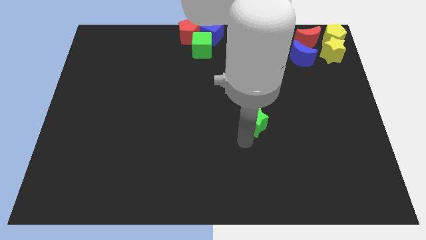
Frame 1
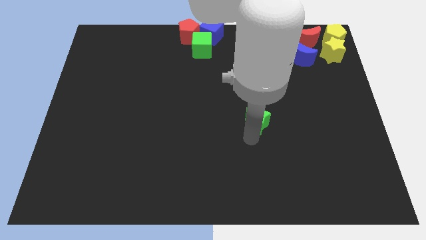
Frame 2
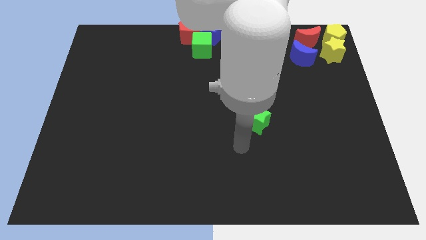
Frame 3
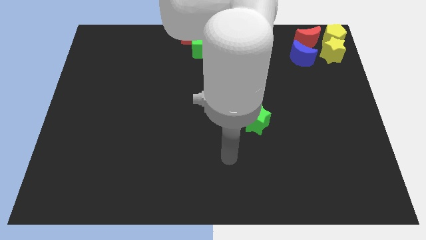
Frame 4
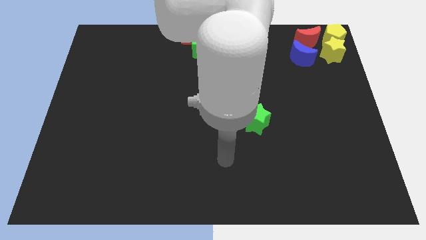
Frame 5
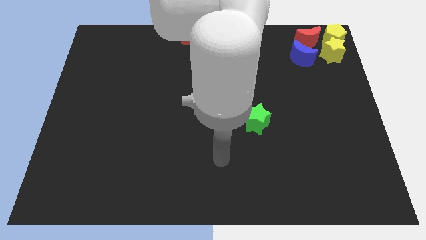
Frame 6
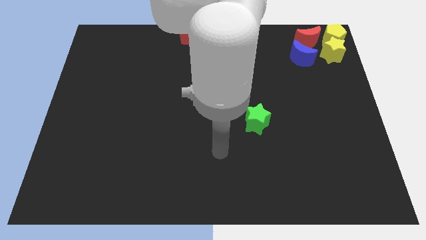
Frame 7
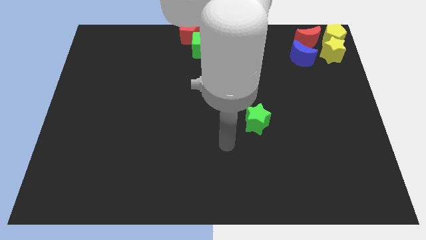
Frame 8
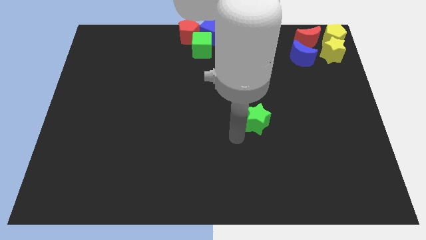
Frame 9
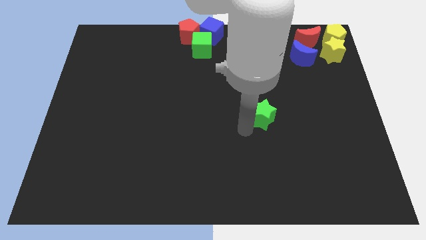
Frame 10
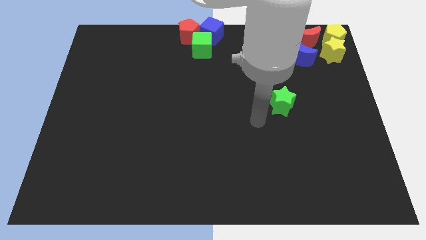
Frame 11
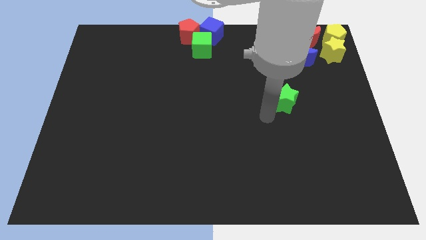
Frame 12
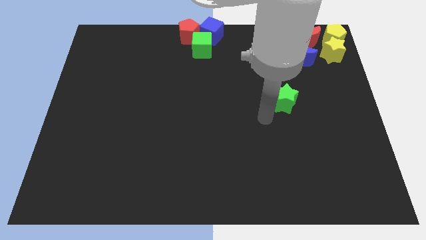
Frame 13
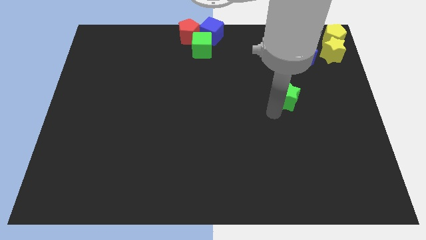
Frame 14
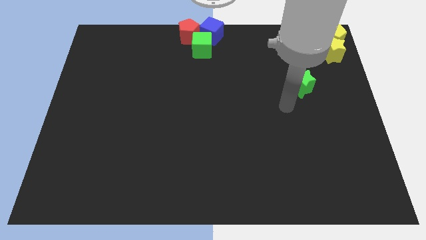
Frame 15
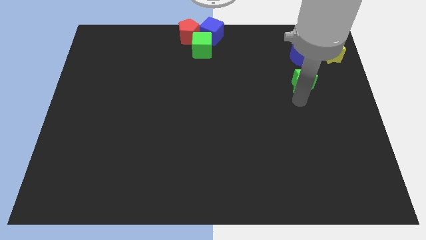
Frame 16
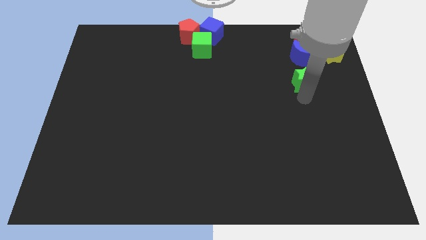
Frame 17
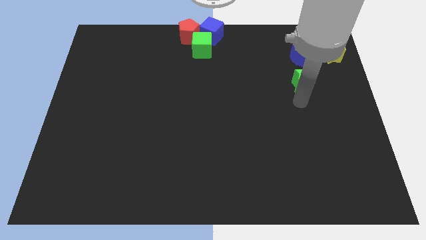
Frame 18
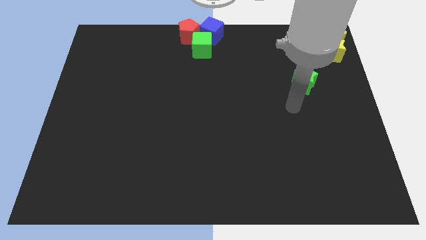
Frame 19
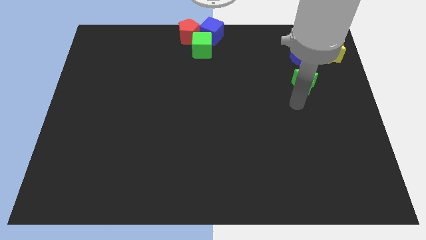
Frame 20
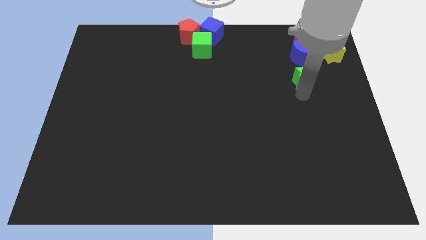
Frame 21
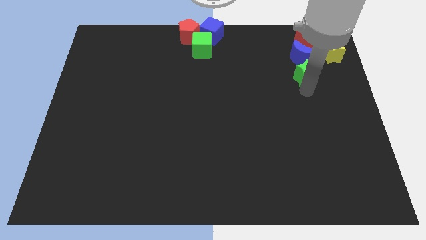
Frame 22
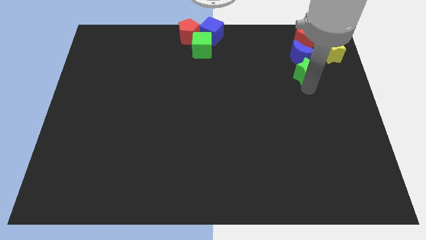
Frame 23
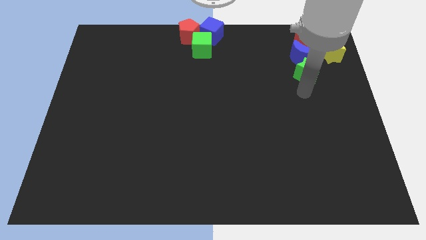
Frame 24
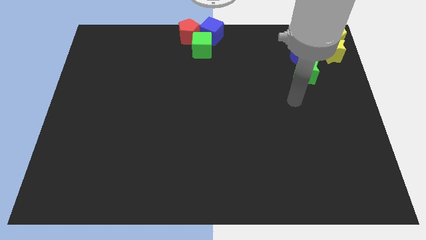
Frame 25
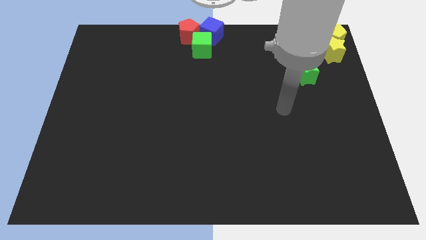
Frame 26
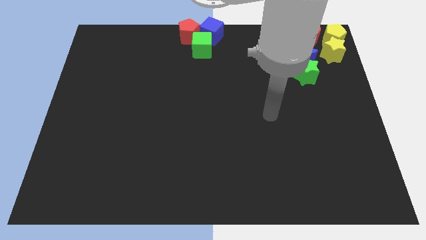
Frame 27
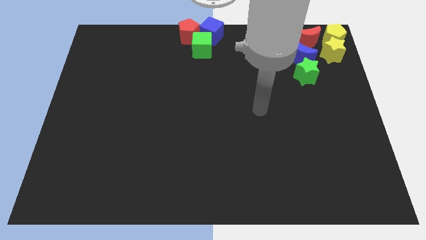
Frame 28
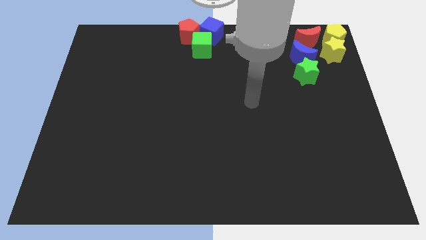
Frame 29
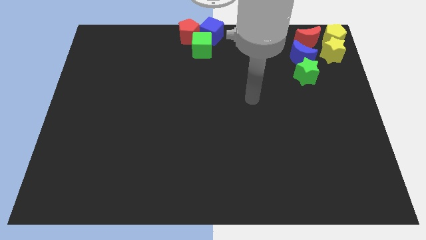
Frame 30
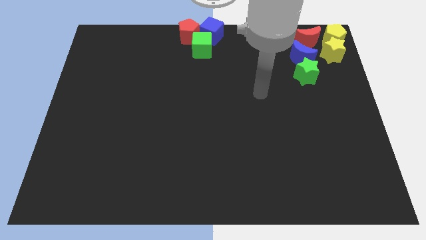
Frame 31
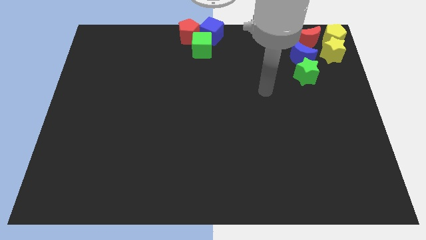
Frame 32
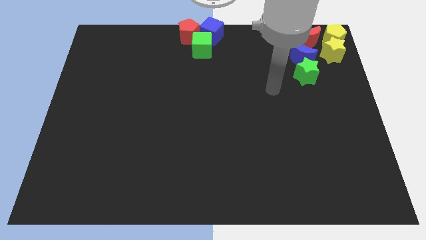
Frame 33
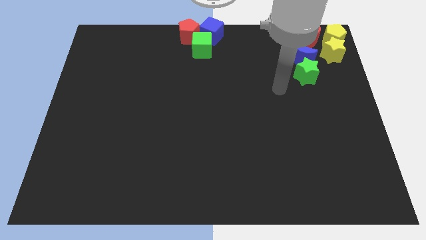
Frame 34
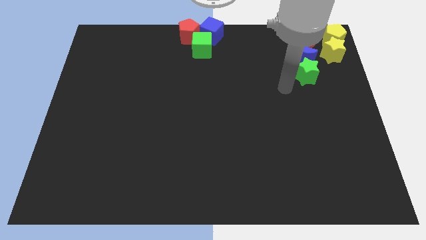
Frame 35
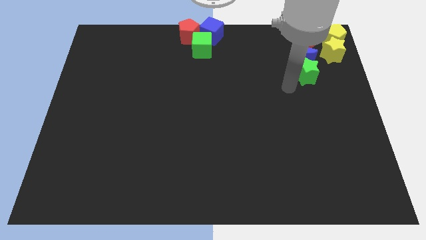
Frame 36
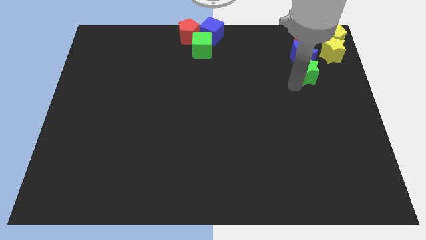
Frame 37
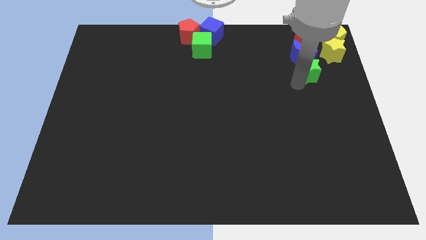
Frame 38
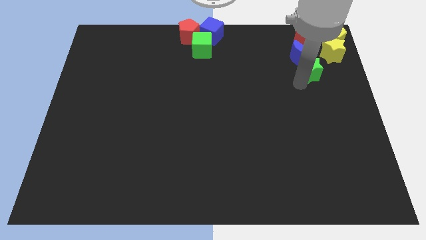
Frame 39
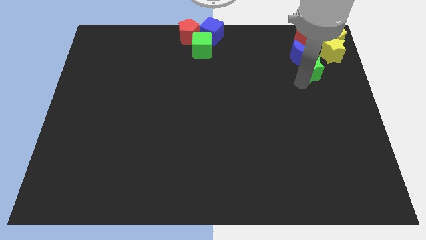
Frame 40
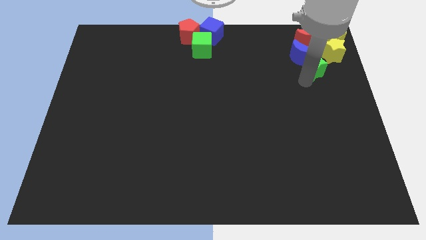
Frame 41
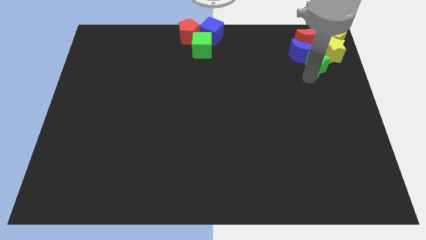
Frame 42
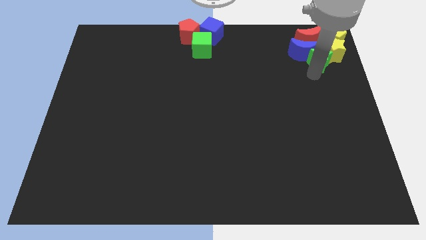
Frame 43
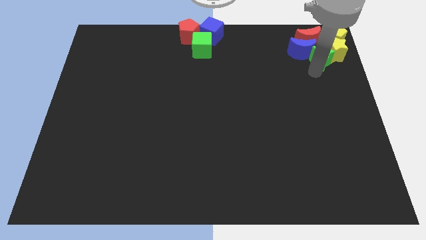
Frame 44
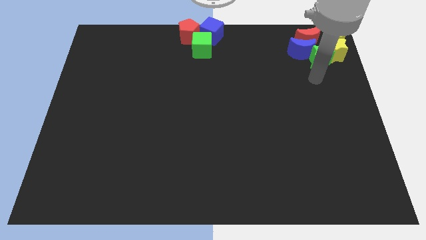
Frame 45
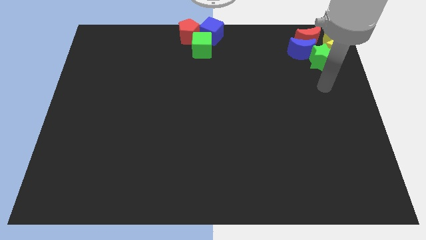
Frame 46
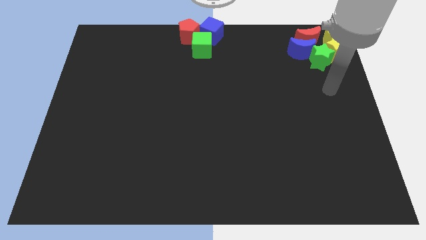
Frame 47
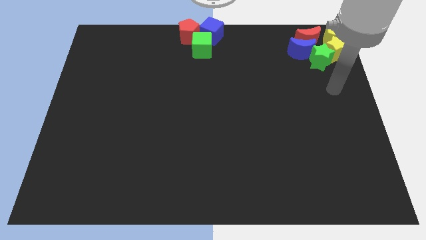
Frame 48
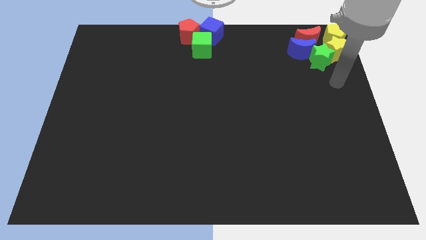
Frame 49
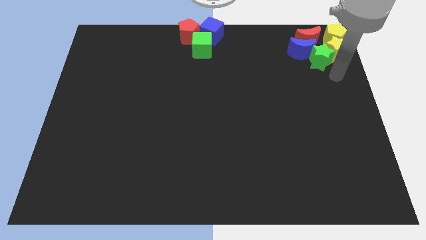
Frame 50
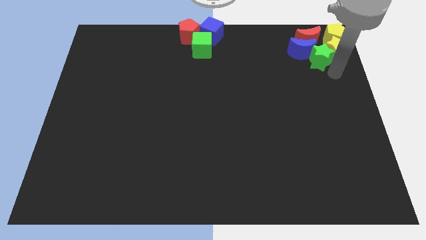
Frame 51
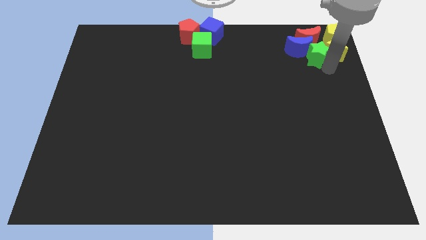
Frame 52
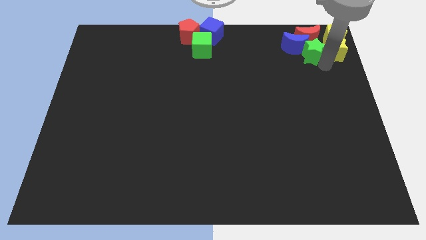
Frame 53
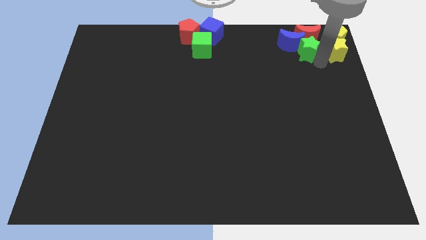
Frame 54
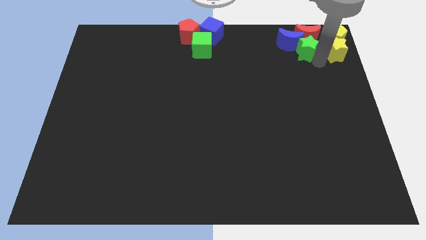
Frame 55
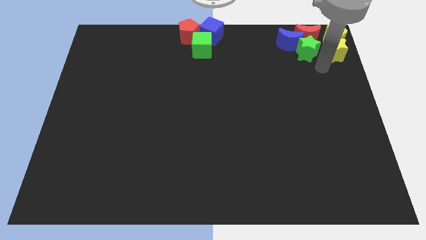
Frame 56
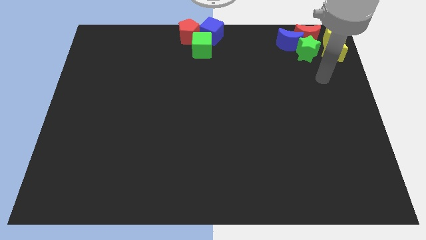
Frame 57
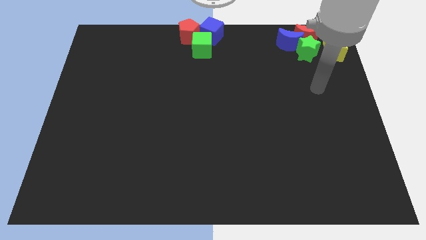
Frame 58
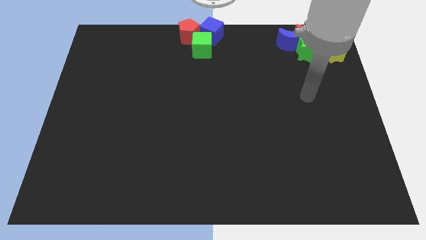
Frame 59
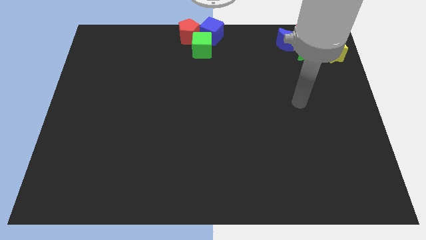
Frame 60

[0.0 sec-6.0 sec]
move the green star into the group of blocks

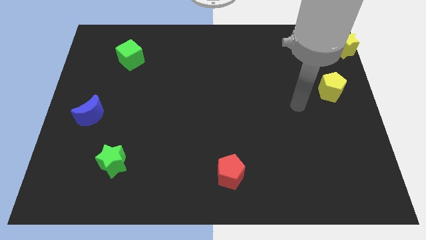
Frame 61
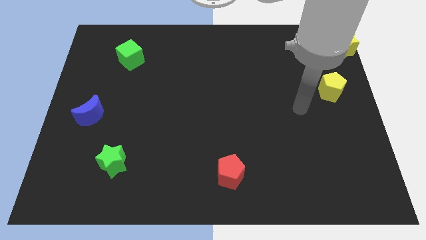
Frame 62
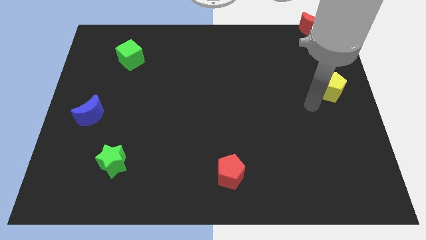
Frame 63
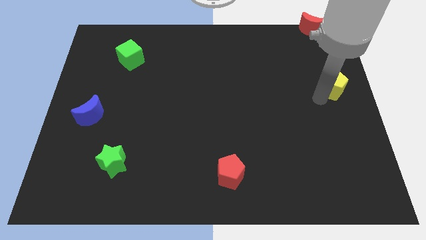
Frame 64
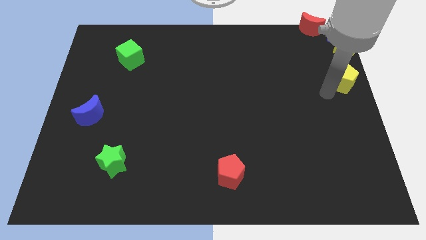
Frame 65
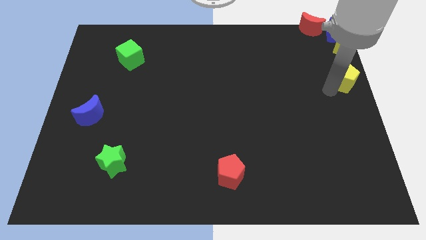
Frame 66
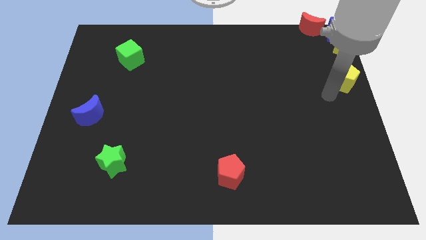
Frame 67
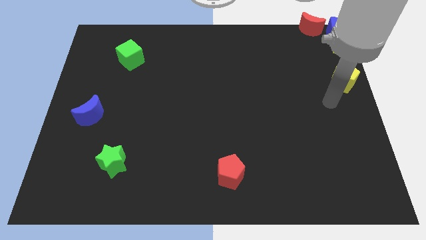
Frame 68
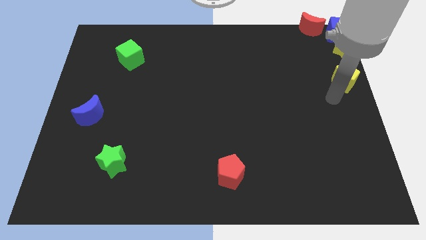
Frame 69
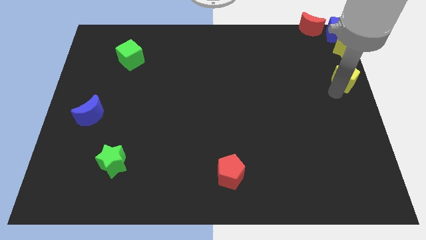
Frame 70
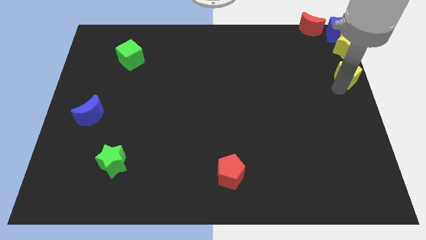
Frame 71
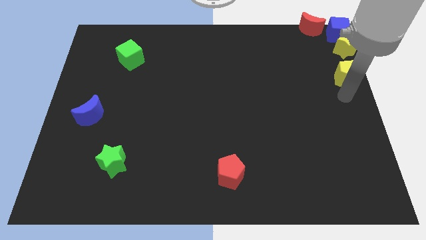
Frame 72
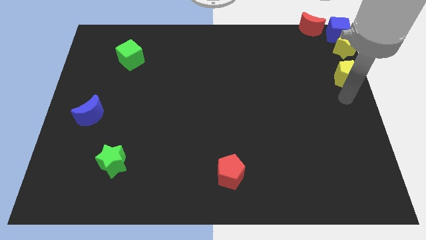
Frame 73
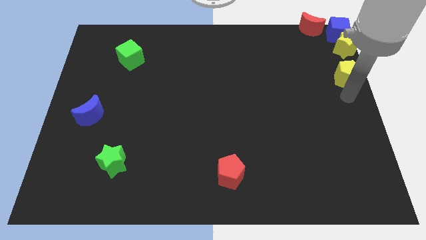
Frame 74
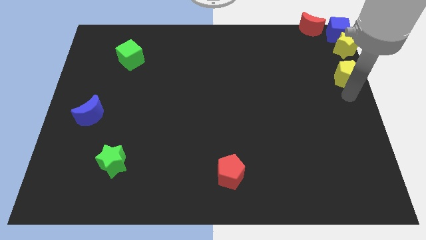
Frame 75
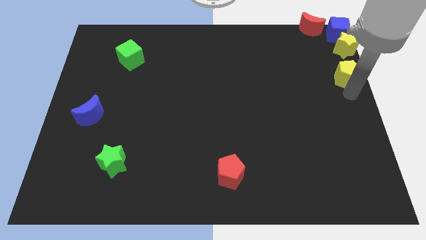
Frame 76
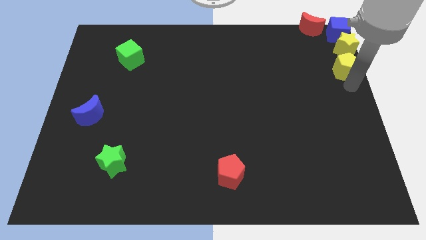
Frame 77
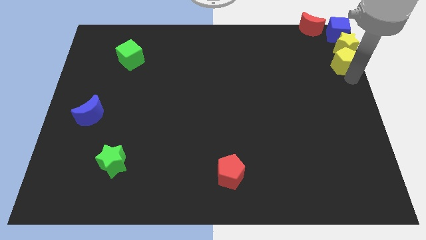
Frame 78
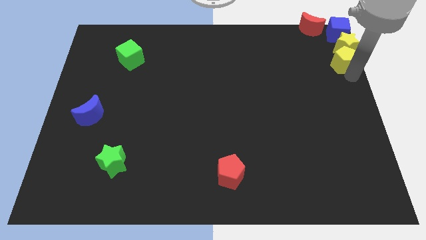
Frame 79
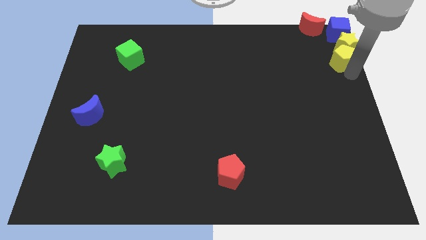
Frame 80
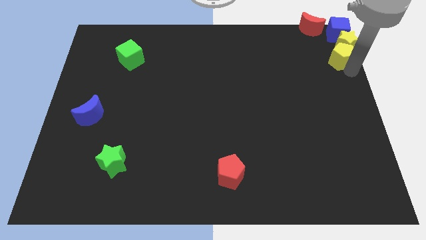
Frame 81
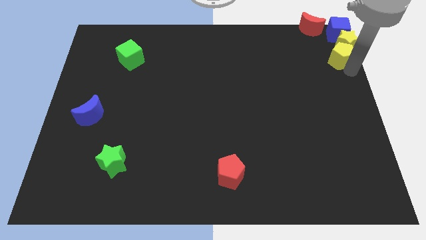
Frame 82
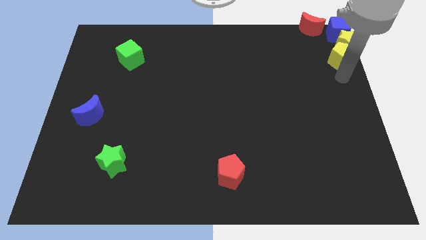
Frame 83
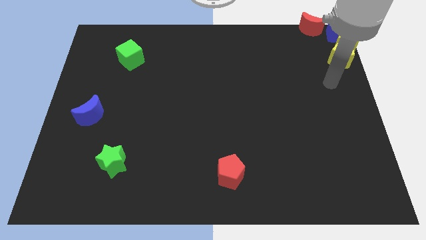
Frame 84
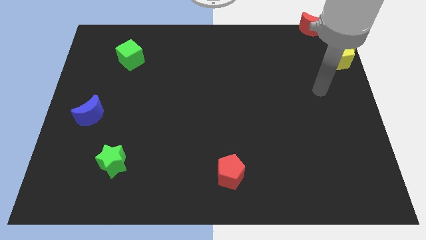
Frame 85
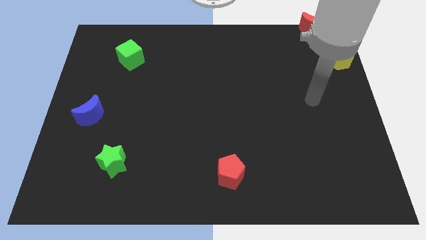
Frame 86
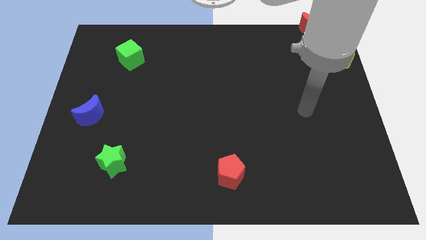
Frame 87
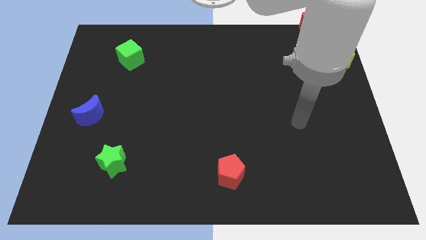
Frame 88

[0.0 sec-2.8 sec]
push the yellow pentagon into the yellow star
